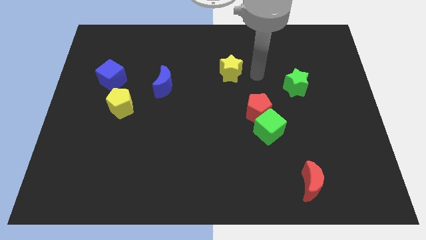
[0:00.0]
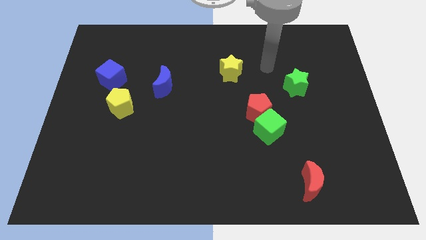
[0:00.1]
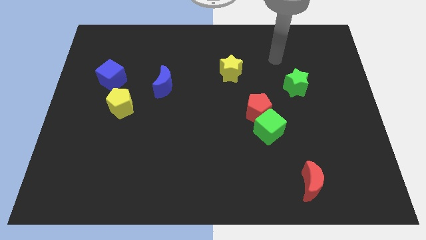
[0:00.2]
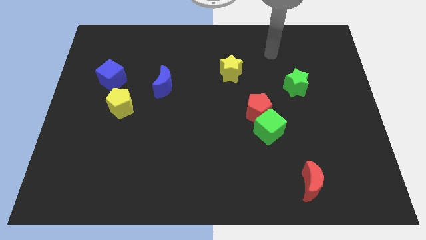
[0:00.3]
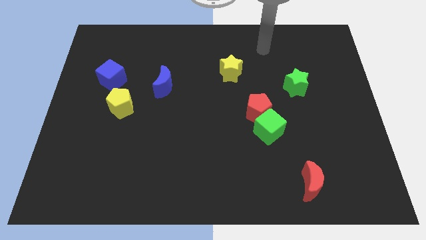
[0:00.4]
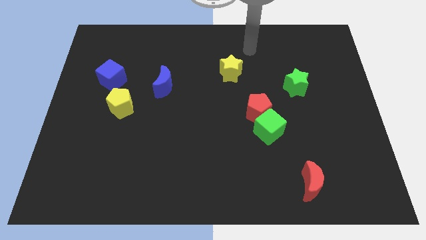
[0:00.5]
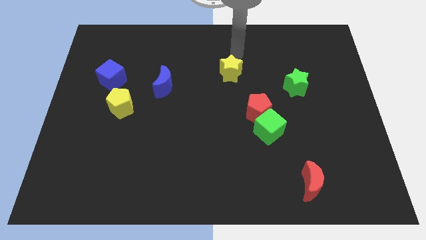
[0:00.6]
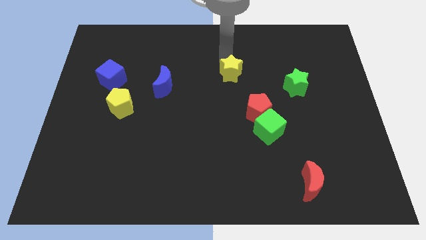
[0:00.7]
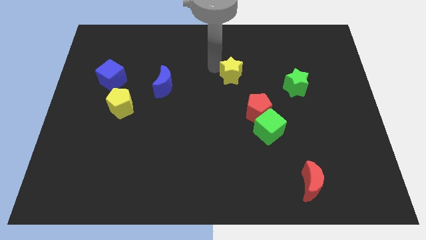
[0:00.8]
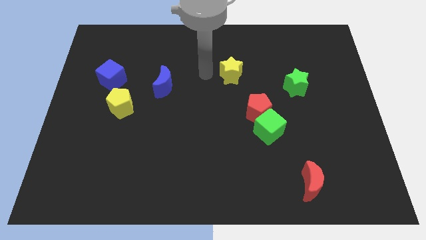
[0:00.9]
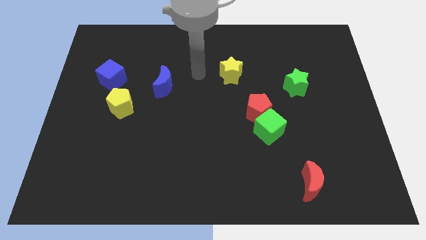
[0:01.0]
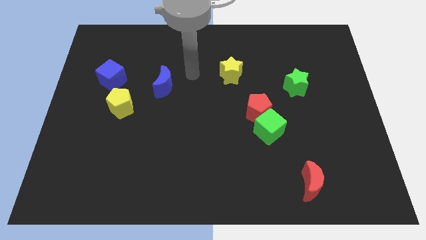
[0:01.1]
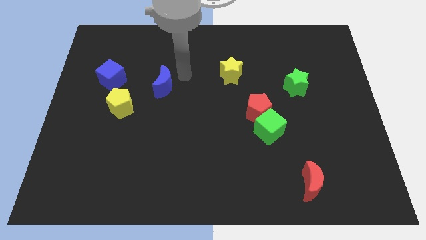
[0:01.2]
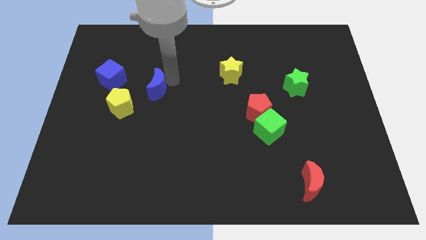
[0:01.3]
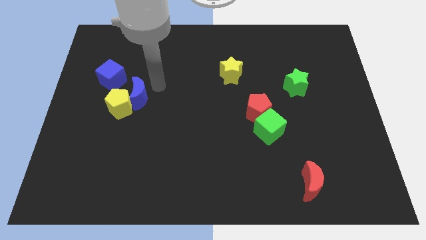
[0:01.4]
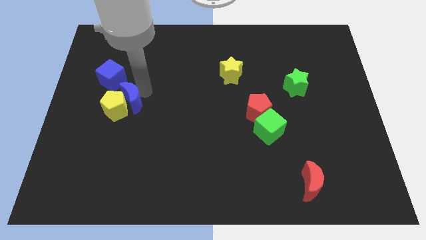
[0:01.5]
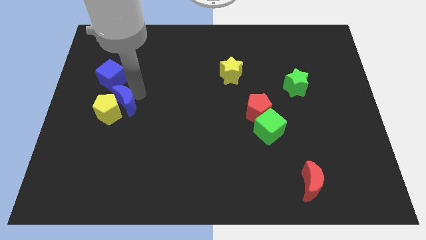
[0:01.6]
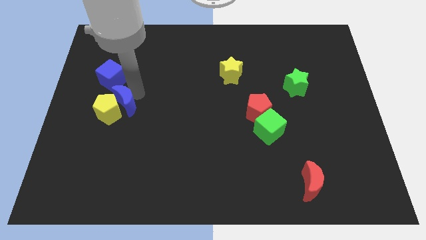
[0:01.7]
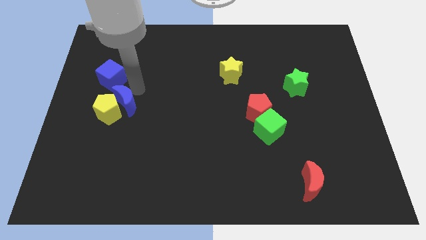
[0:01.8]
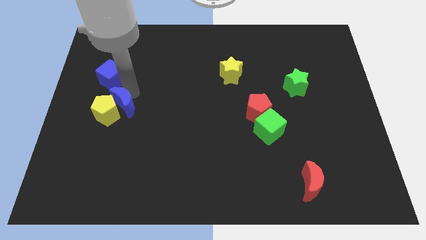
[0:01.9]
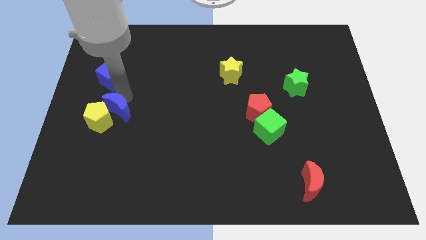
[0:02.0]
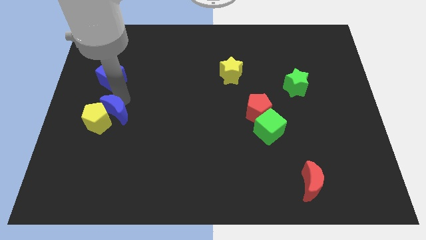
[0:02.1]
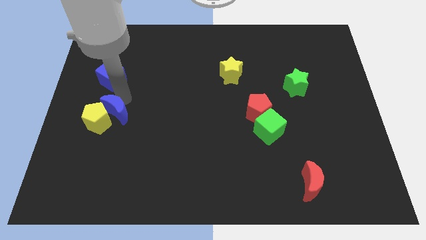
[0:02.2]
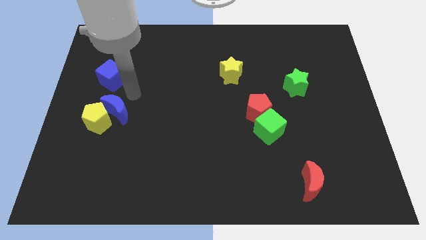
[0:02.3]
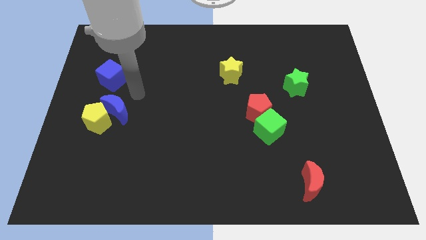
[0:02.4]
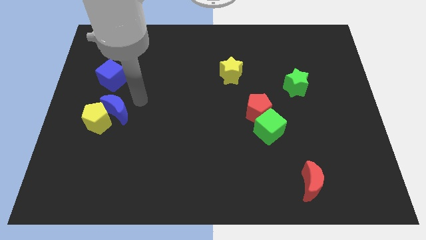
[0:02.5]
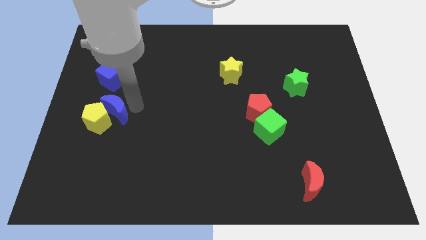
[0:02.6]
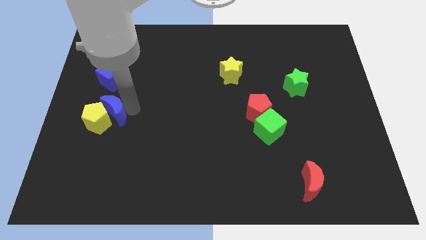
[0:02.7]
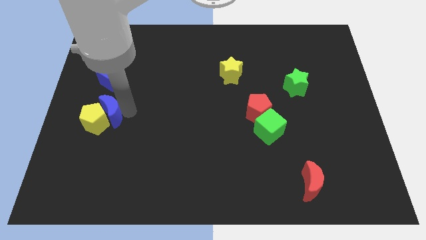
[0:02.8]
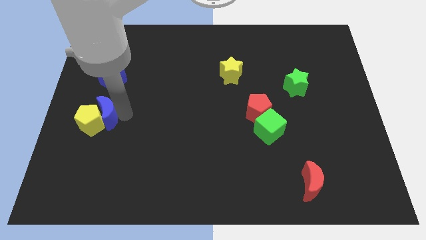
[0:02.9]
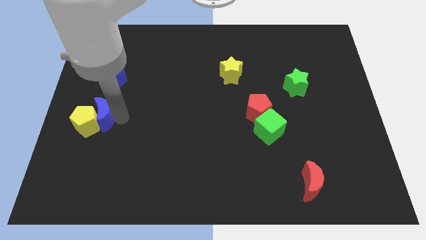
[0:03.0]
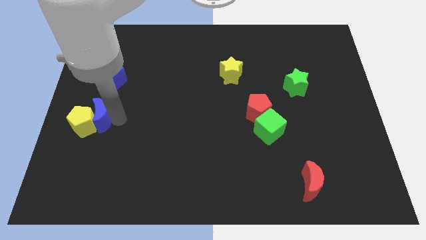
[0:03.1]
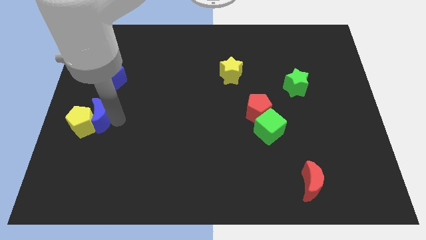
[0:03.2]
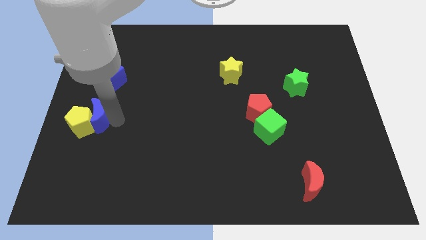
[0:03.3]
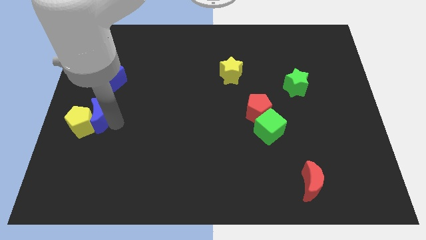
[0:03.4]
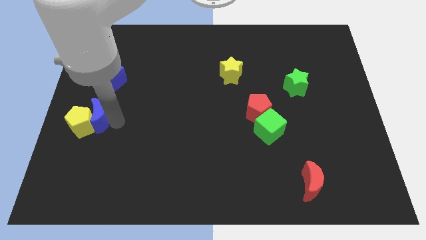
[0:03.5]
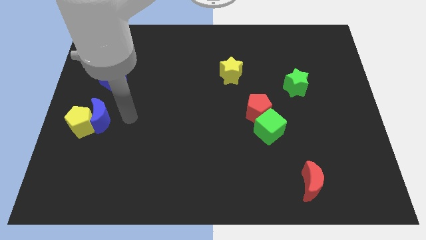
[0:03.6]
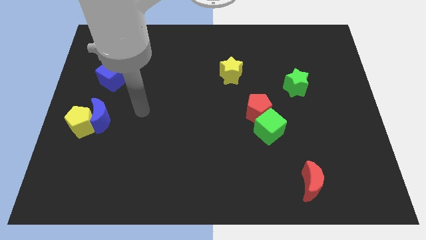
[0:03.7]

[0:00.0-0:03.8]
push the blue crescent into the yellow pentagon

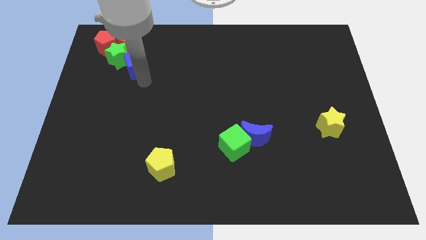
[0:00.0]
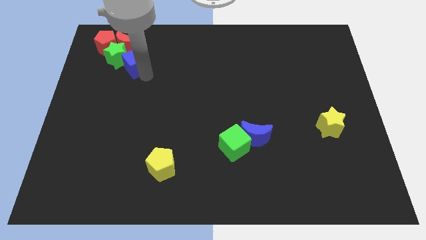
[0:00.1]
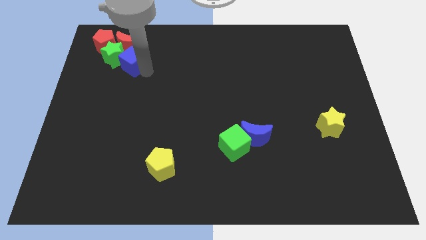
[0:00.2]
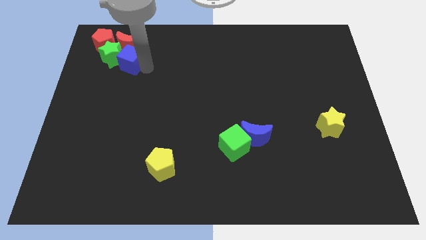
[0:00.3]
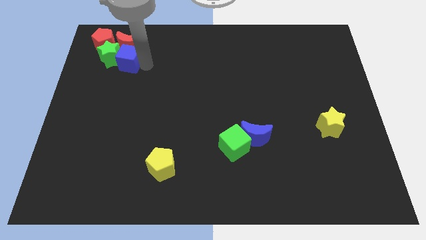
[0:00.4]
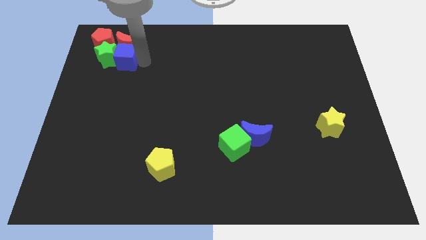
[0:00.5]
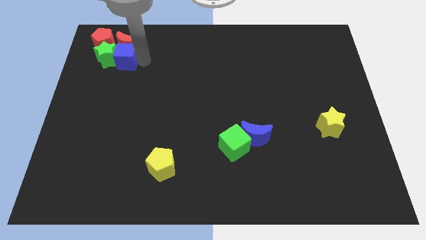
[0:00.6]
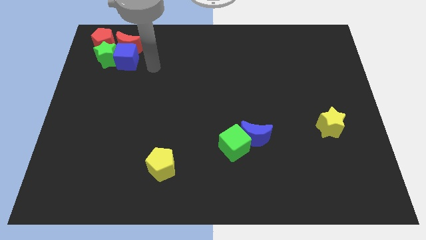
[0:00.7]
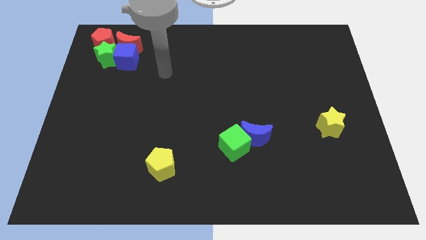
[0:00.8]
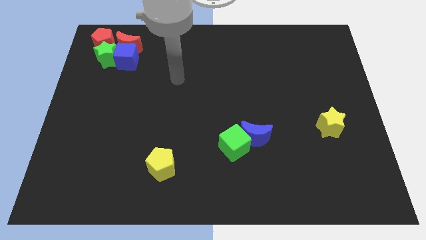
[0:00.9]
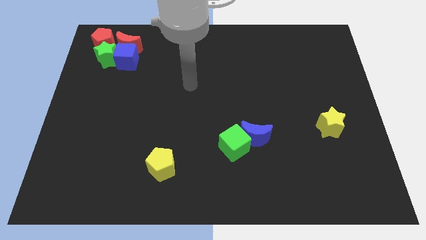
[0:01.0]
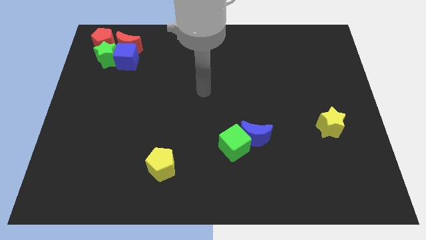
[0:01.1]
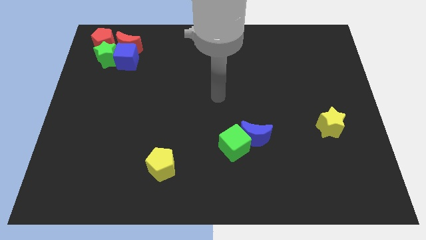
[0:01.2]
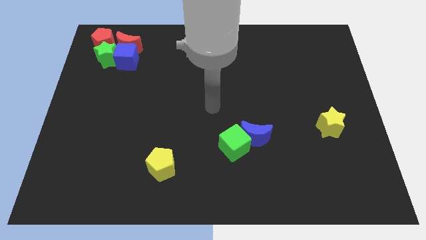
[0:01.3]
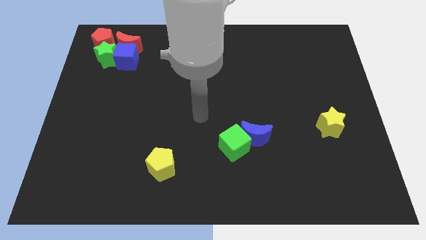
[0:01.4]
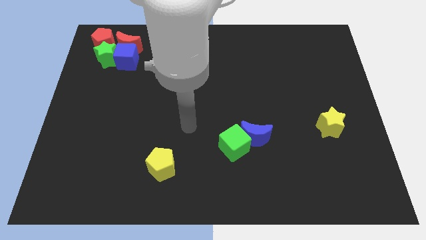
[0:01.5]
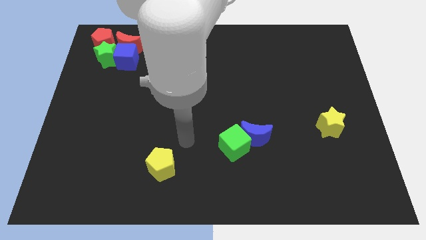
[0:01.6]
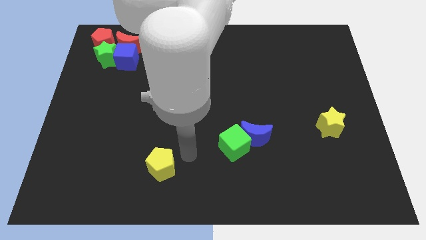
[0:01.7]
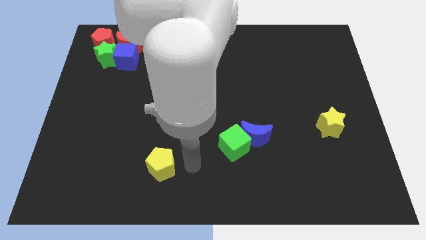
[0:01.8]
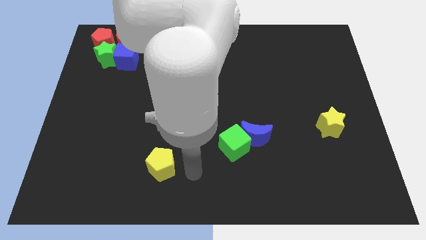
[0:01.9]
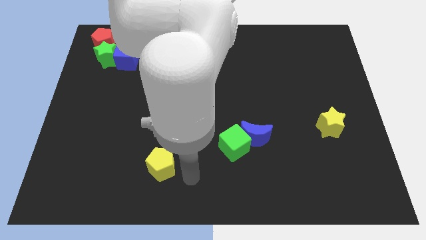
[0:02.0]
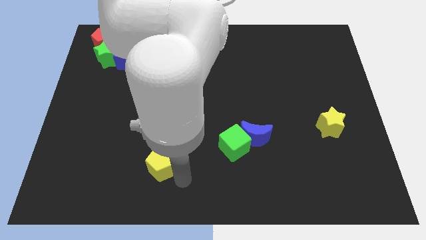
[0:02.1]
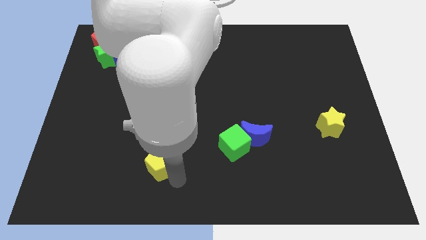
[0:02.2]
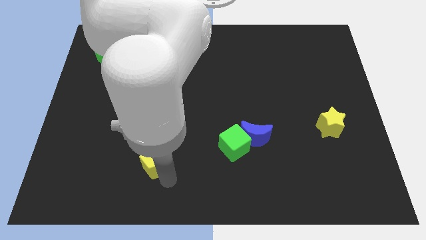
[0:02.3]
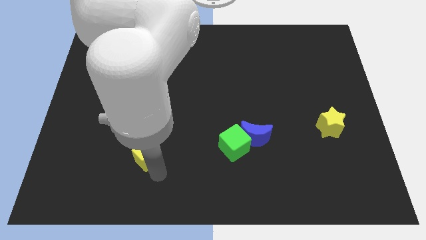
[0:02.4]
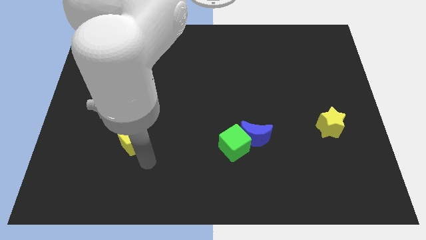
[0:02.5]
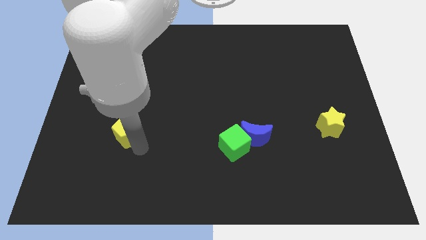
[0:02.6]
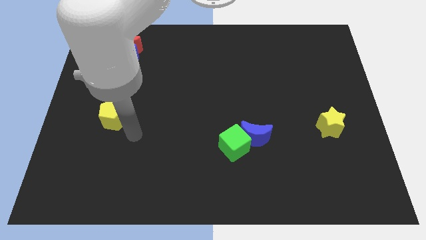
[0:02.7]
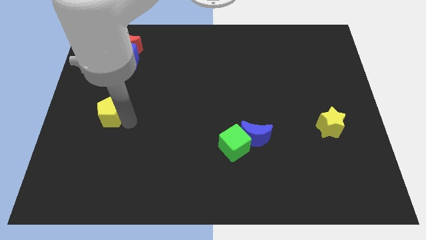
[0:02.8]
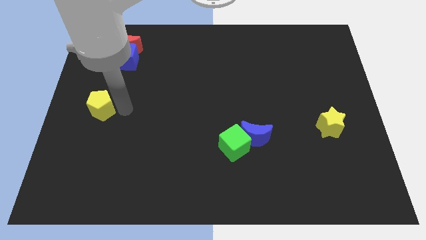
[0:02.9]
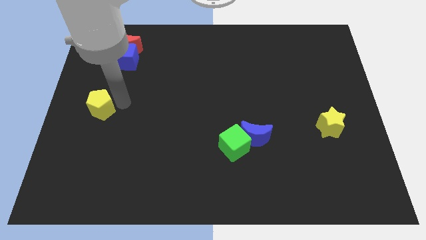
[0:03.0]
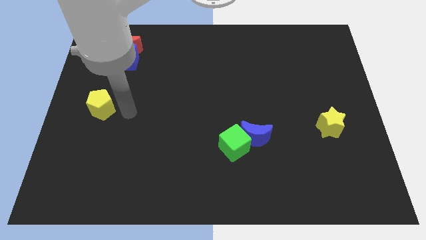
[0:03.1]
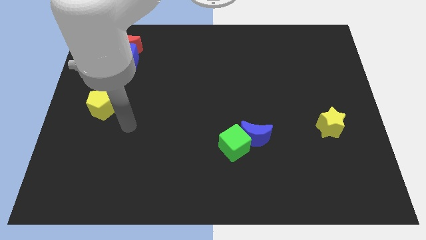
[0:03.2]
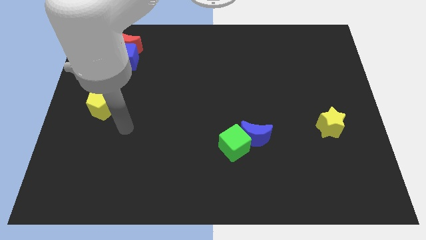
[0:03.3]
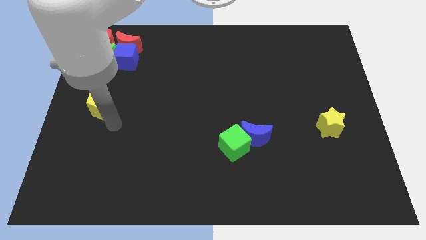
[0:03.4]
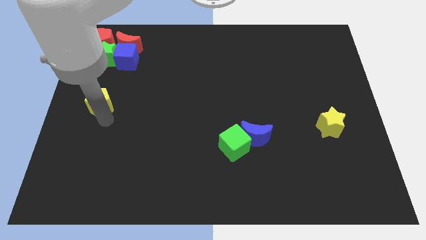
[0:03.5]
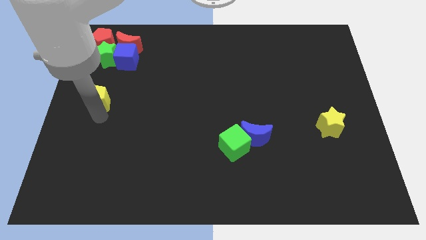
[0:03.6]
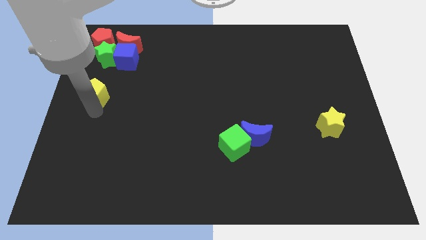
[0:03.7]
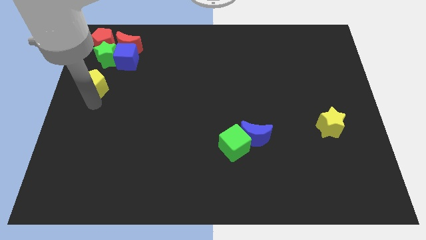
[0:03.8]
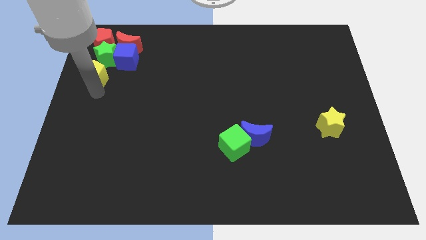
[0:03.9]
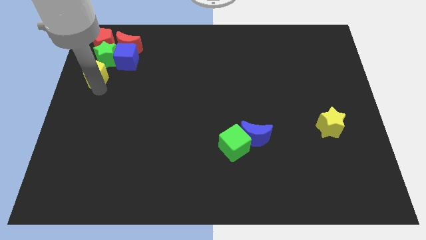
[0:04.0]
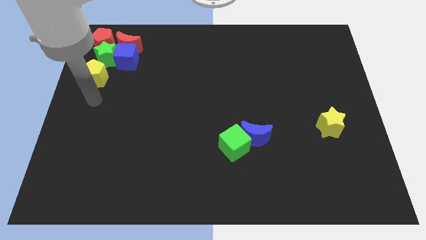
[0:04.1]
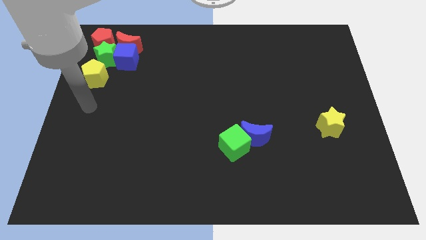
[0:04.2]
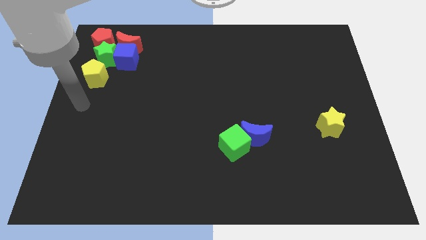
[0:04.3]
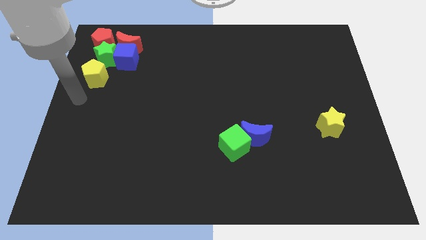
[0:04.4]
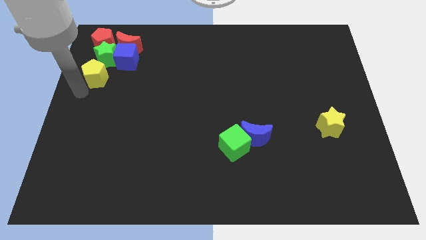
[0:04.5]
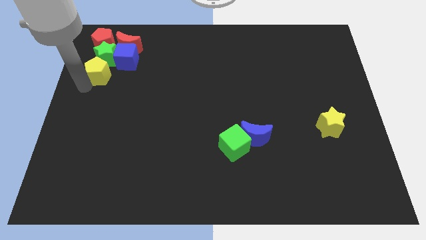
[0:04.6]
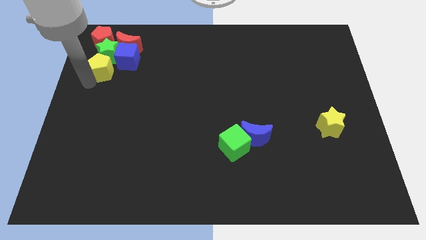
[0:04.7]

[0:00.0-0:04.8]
place the yellow pentagon to the bottom of the green star

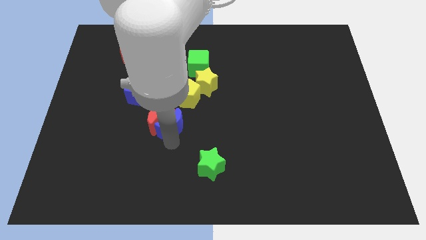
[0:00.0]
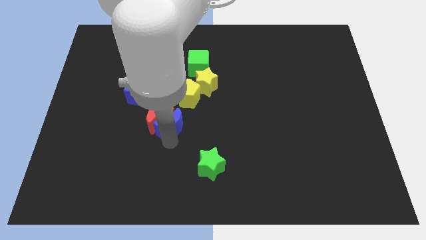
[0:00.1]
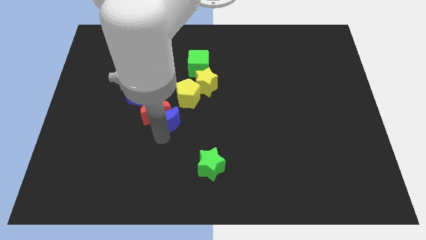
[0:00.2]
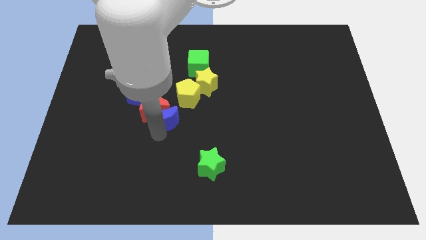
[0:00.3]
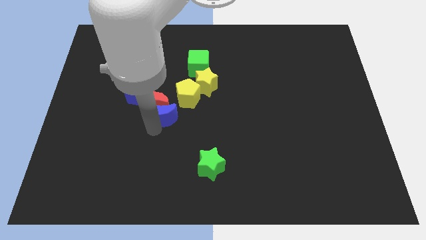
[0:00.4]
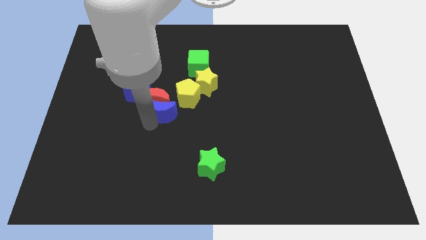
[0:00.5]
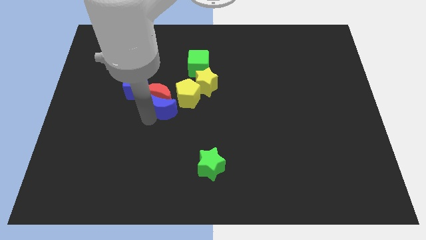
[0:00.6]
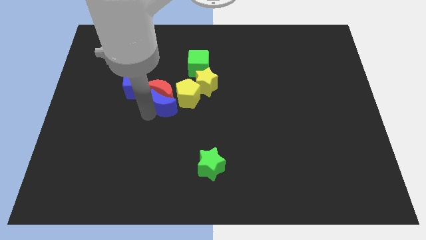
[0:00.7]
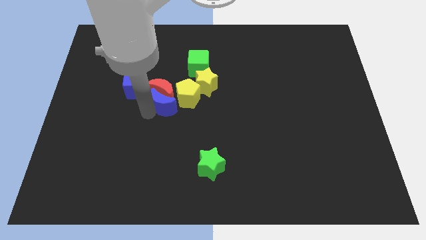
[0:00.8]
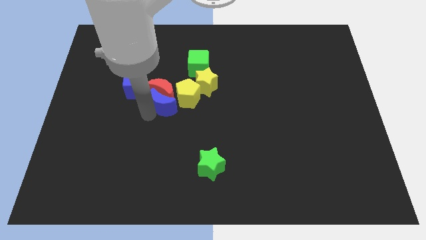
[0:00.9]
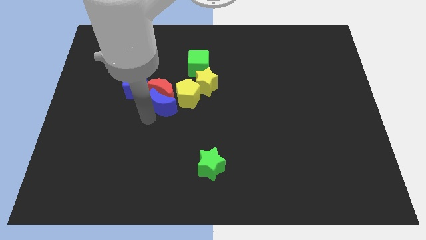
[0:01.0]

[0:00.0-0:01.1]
place the red moon to the left of the yellow pentagon
